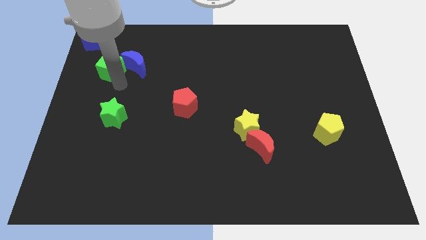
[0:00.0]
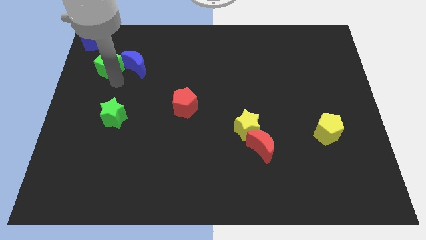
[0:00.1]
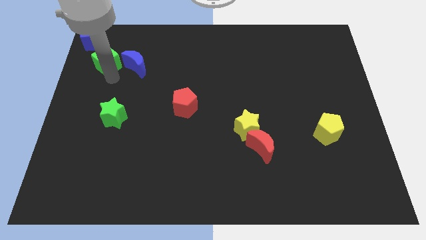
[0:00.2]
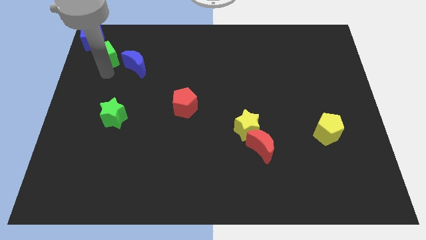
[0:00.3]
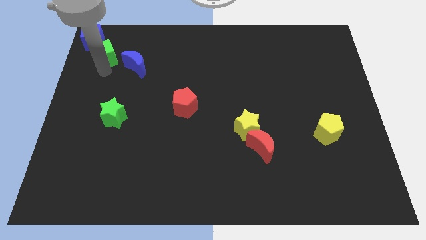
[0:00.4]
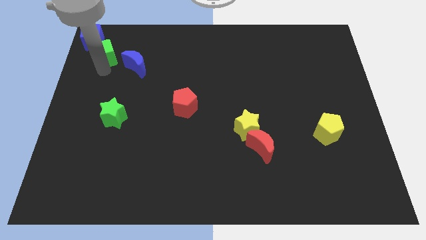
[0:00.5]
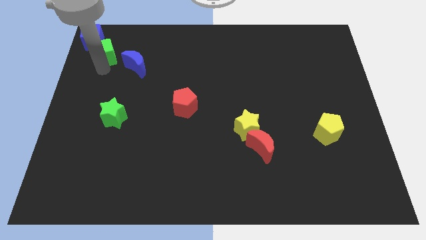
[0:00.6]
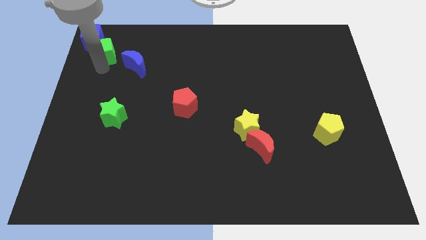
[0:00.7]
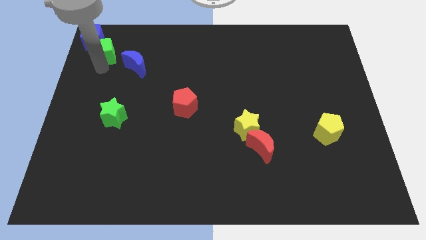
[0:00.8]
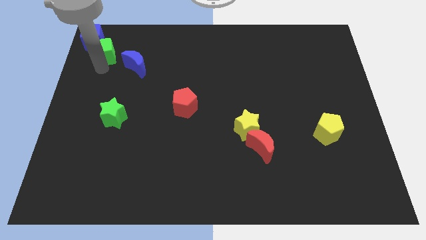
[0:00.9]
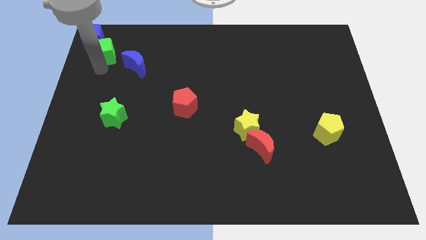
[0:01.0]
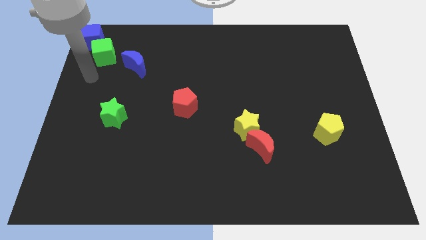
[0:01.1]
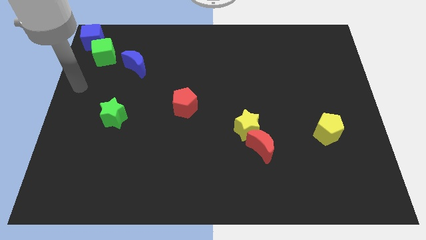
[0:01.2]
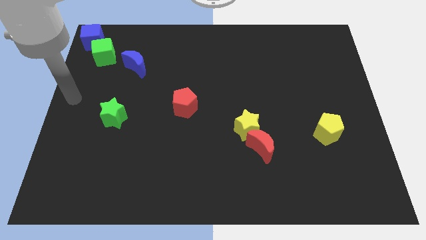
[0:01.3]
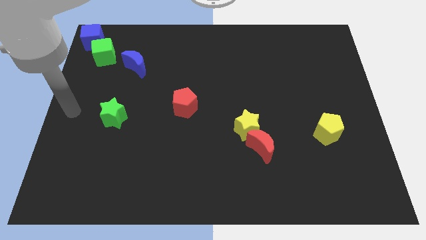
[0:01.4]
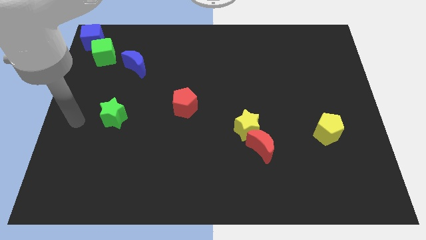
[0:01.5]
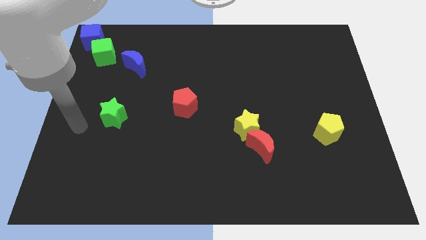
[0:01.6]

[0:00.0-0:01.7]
move the green cube below the blue cube

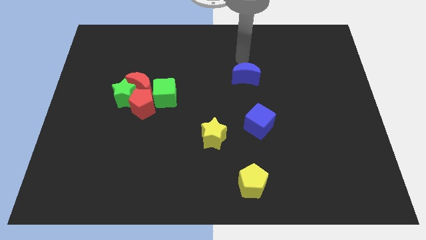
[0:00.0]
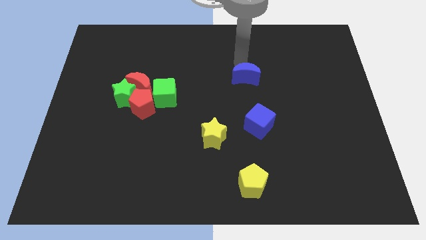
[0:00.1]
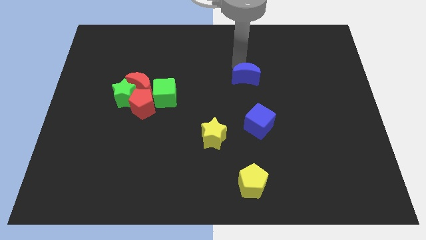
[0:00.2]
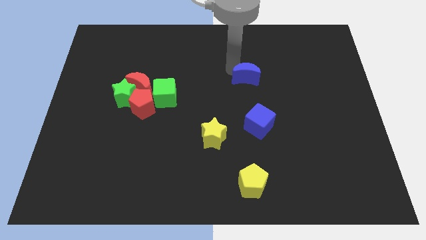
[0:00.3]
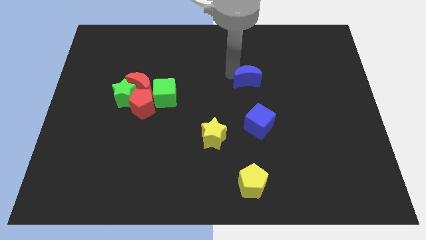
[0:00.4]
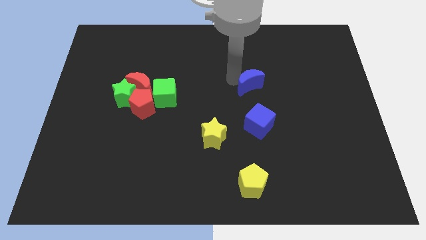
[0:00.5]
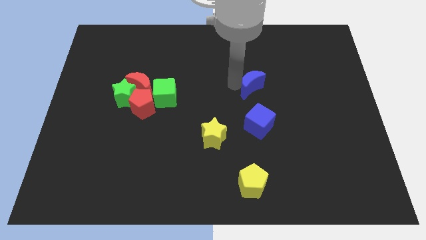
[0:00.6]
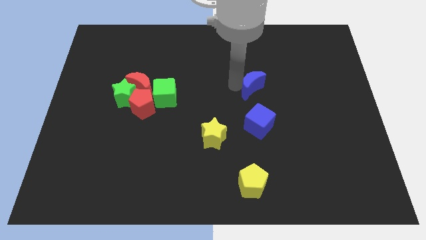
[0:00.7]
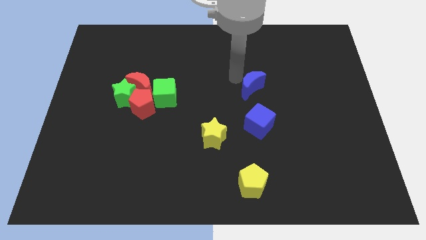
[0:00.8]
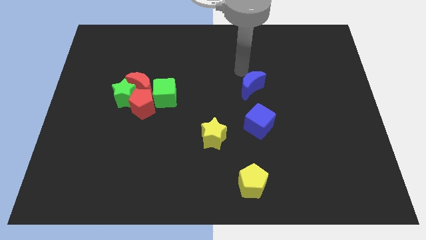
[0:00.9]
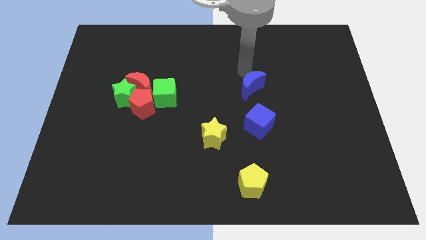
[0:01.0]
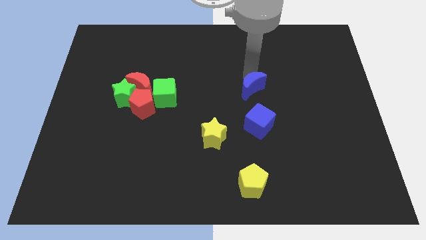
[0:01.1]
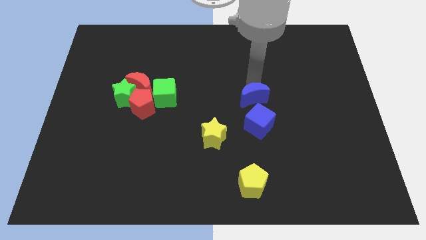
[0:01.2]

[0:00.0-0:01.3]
place the blue crescent above the blue cube

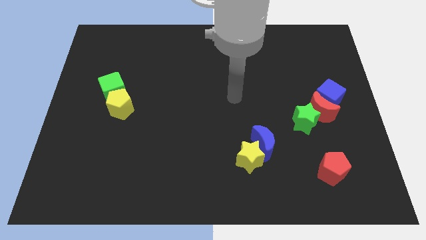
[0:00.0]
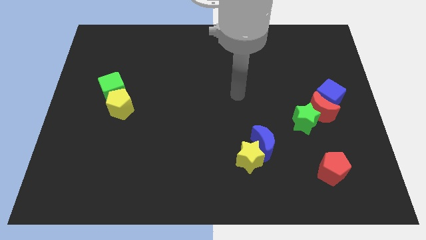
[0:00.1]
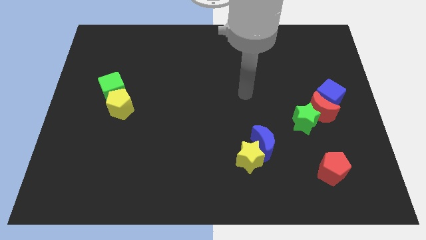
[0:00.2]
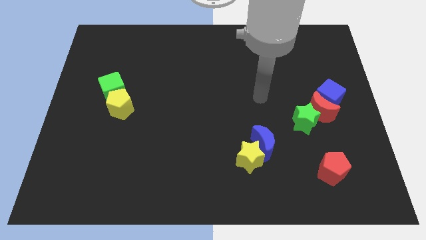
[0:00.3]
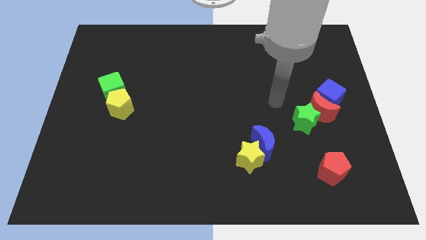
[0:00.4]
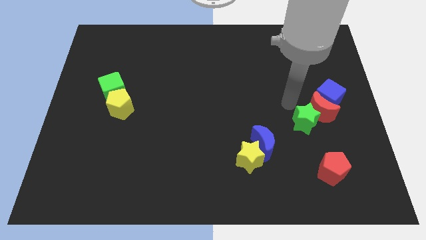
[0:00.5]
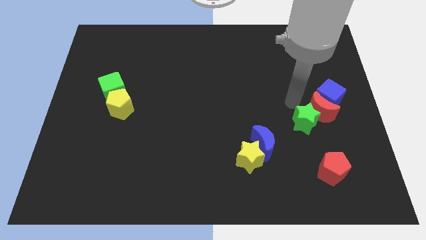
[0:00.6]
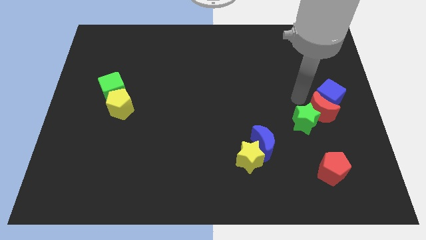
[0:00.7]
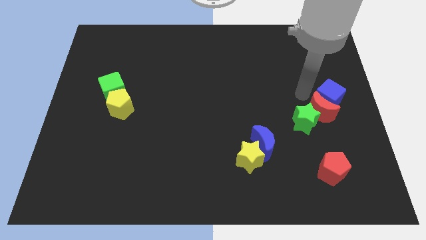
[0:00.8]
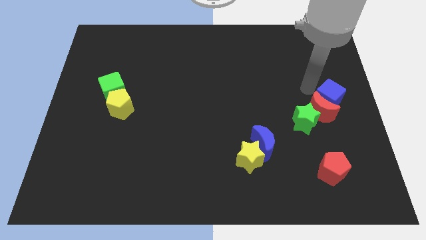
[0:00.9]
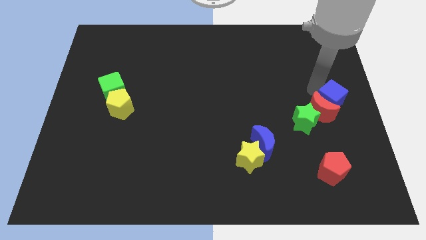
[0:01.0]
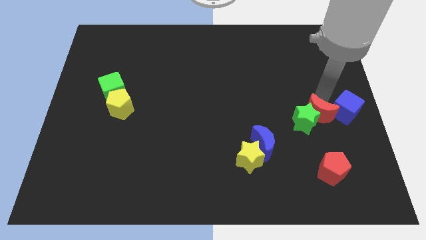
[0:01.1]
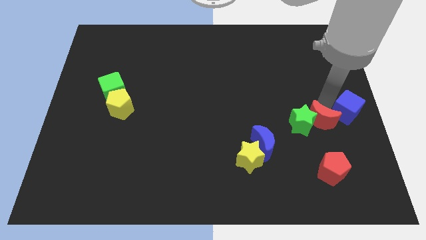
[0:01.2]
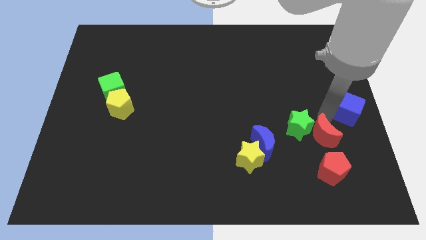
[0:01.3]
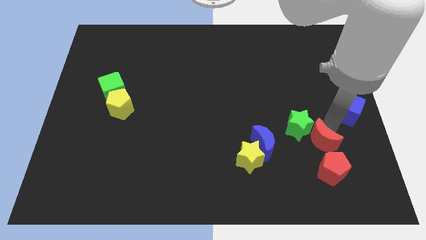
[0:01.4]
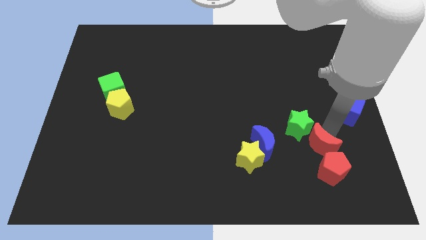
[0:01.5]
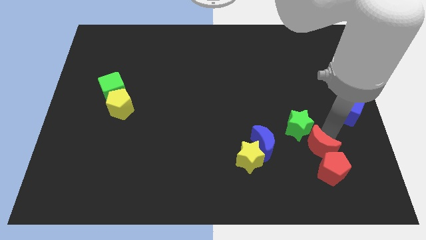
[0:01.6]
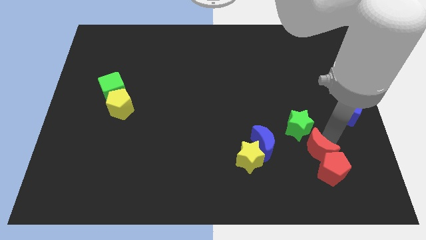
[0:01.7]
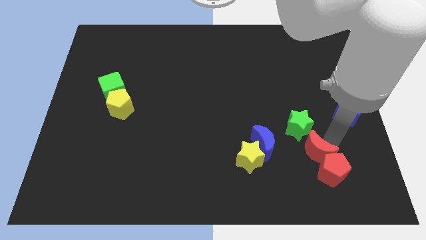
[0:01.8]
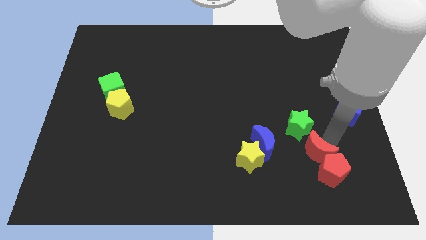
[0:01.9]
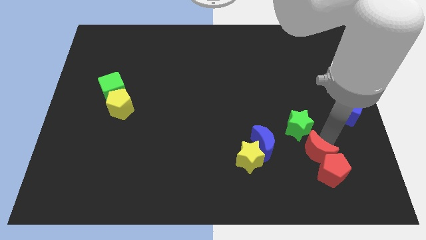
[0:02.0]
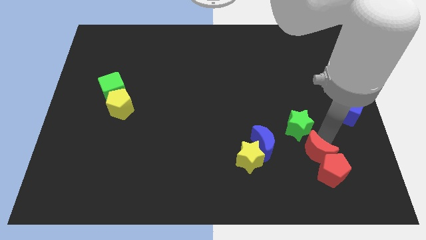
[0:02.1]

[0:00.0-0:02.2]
move red crescent into top of red pentagon

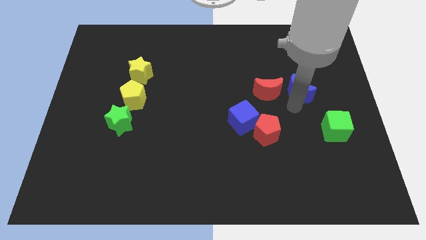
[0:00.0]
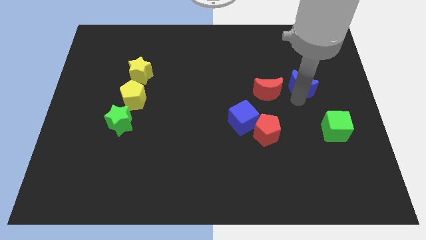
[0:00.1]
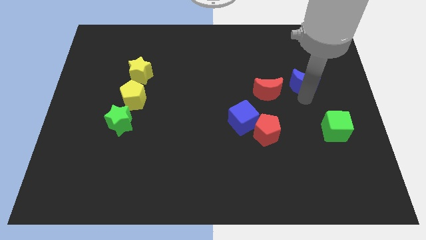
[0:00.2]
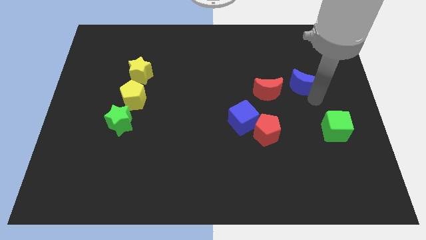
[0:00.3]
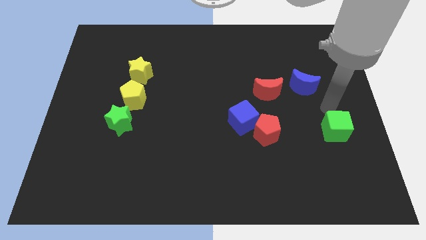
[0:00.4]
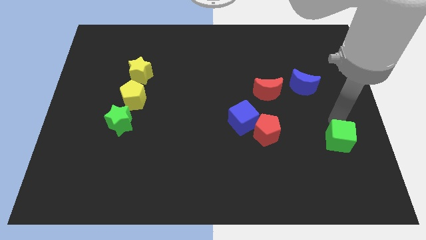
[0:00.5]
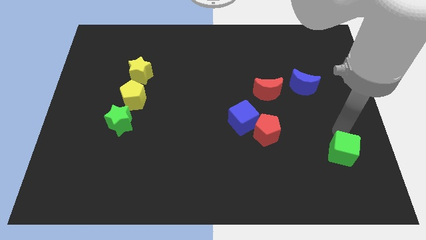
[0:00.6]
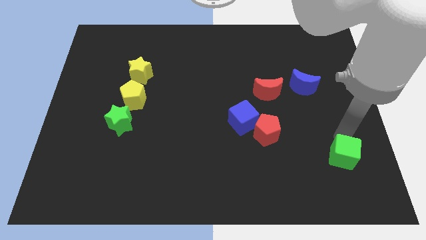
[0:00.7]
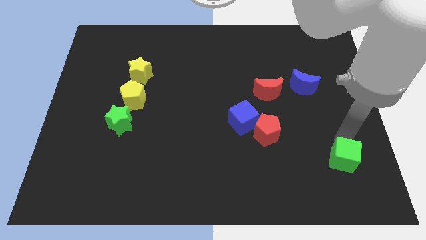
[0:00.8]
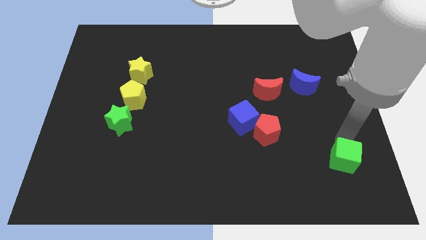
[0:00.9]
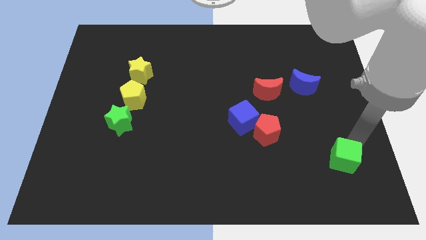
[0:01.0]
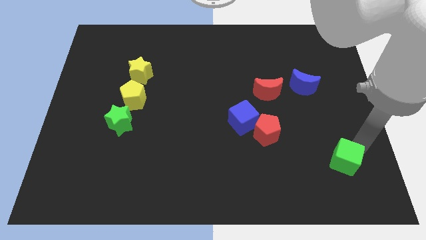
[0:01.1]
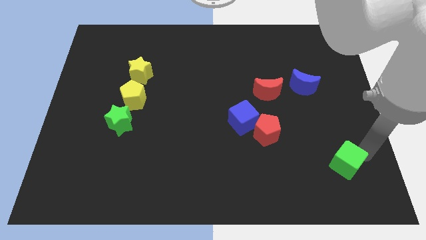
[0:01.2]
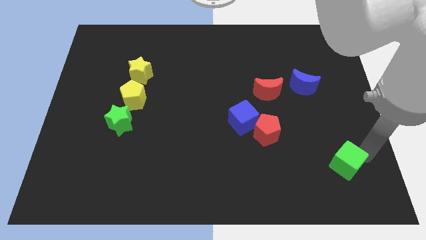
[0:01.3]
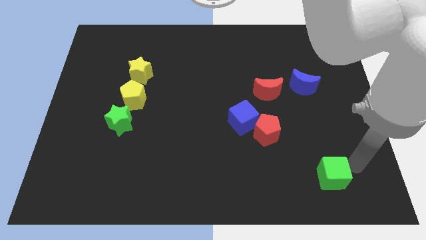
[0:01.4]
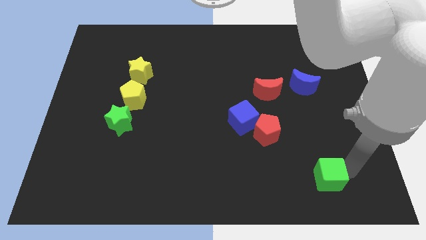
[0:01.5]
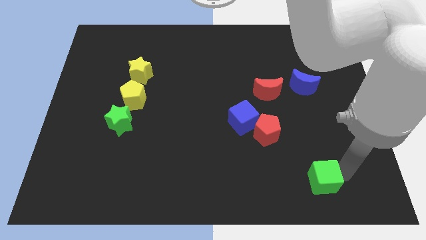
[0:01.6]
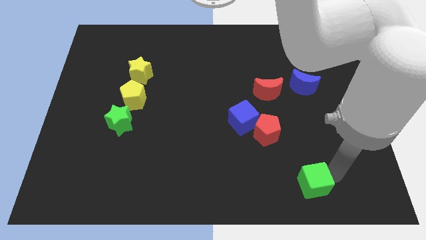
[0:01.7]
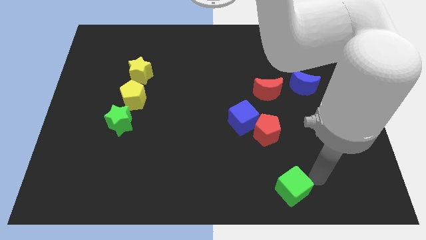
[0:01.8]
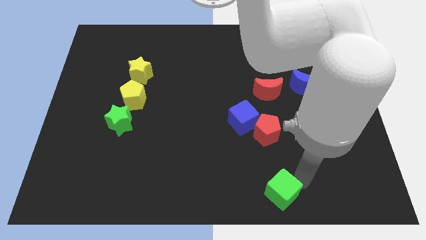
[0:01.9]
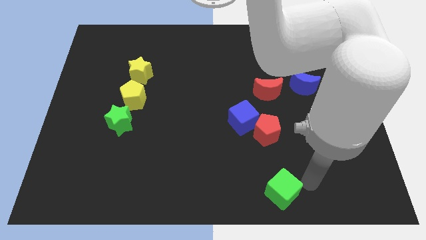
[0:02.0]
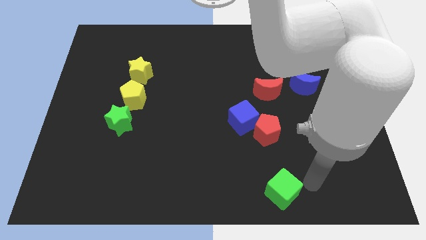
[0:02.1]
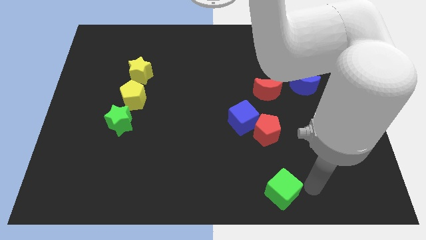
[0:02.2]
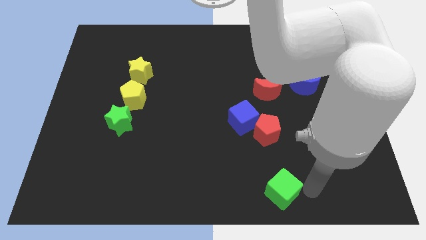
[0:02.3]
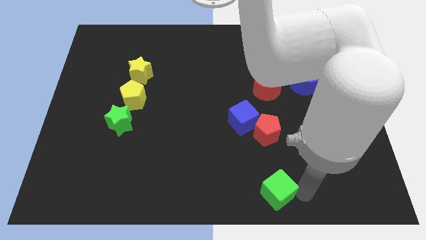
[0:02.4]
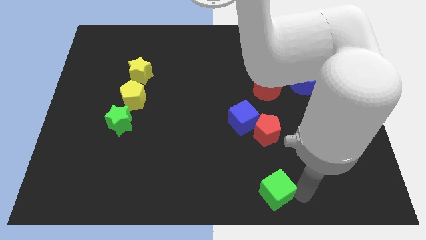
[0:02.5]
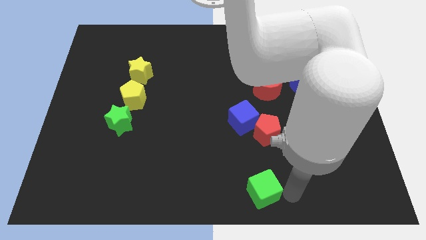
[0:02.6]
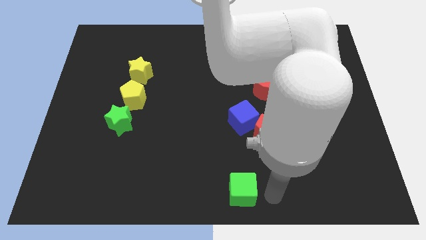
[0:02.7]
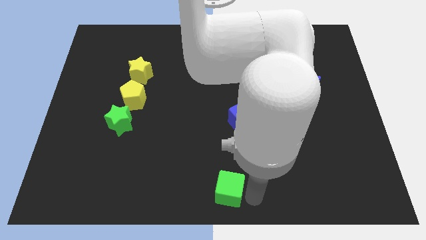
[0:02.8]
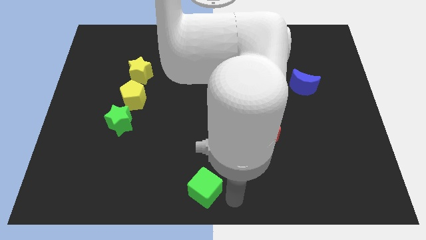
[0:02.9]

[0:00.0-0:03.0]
place the green cube diagonal to the blue cube

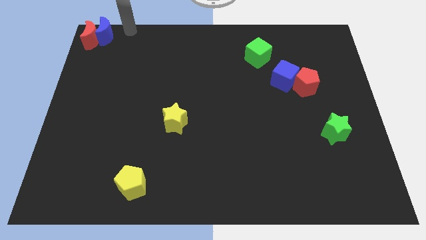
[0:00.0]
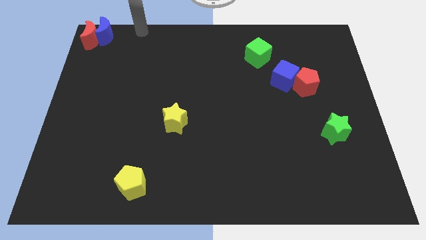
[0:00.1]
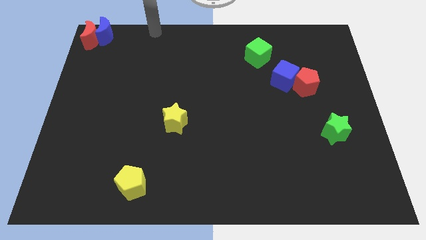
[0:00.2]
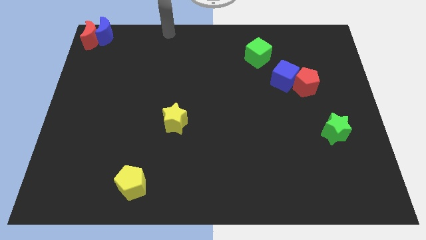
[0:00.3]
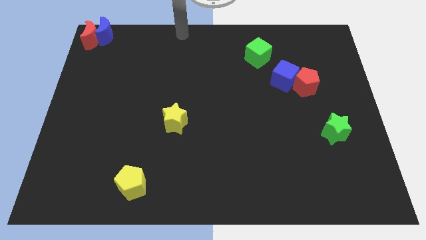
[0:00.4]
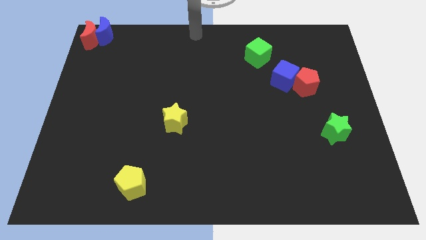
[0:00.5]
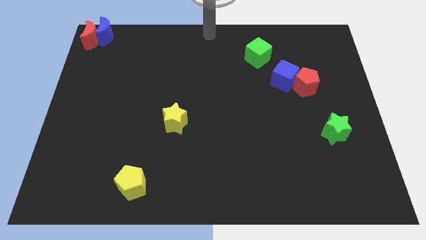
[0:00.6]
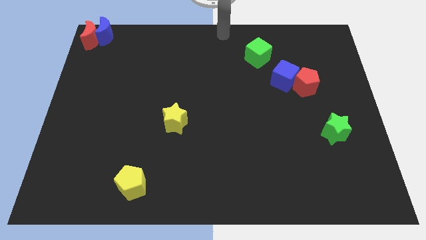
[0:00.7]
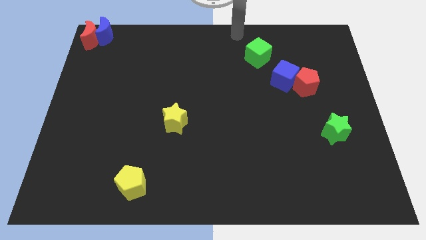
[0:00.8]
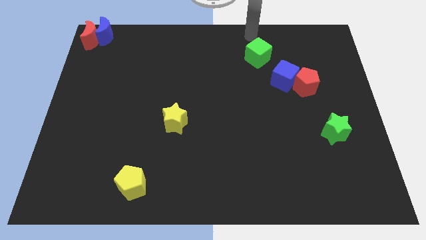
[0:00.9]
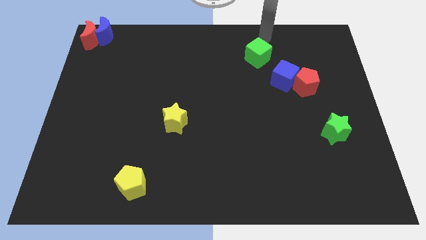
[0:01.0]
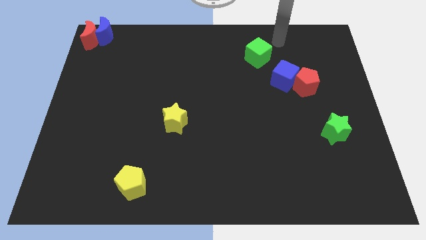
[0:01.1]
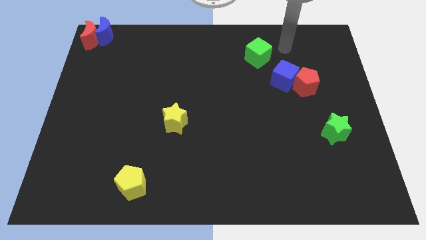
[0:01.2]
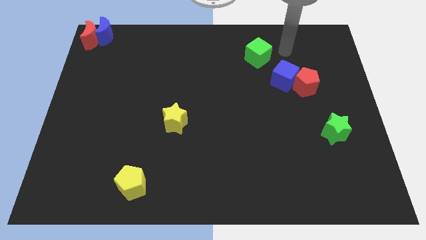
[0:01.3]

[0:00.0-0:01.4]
move your arm away from the blue moon
